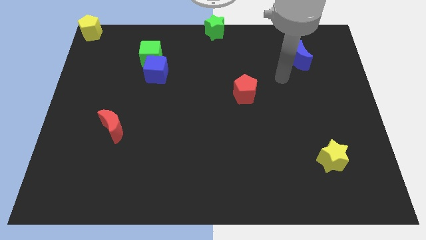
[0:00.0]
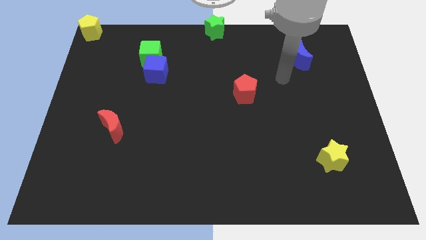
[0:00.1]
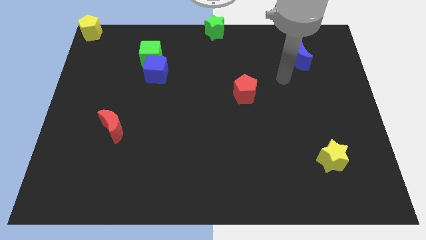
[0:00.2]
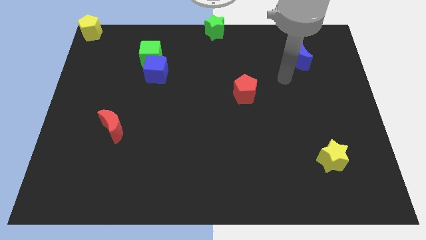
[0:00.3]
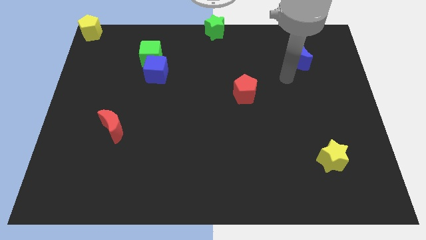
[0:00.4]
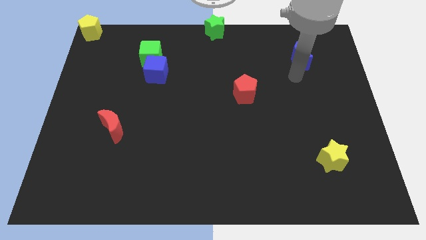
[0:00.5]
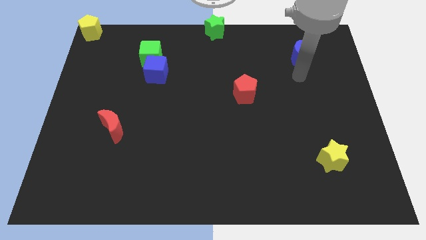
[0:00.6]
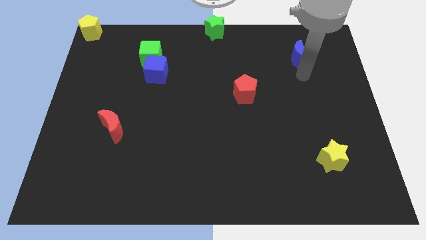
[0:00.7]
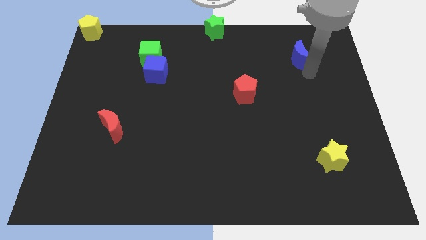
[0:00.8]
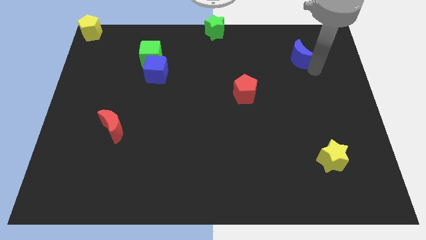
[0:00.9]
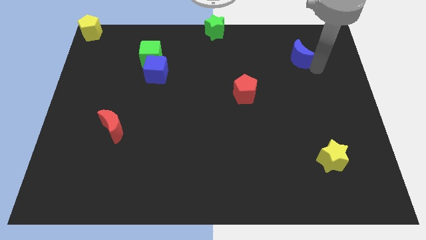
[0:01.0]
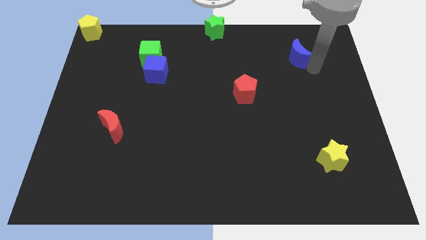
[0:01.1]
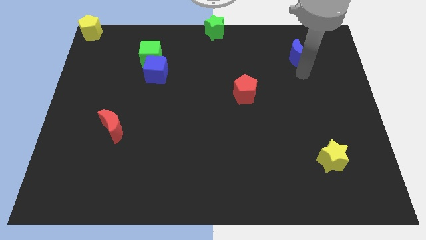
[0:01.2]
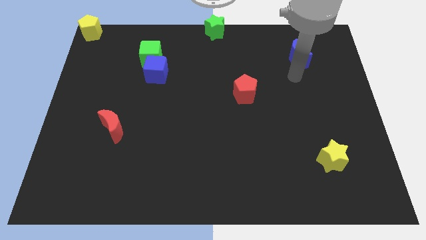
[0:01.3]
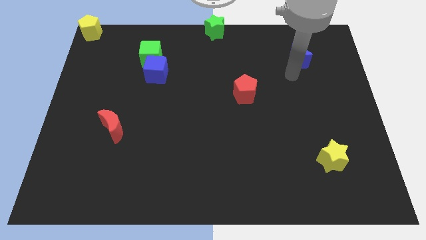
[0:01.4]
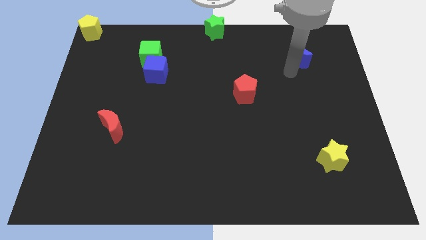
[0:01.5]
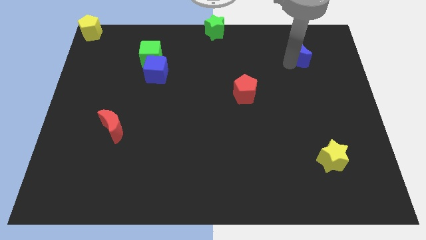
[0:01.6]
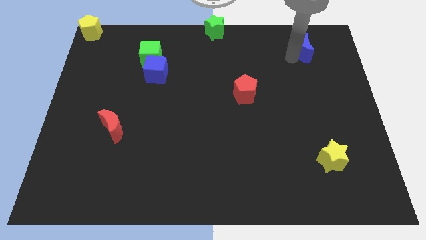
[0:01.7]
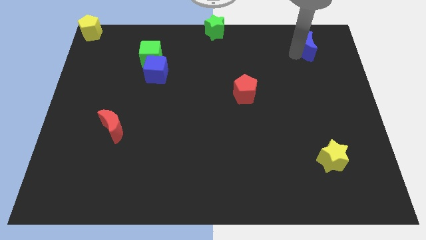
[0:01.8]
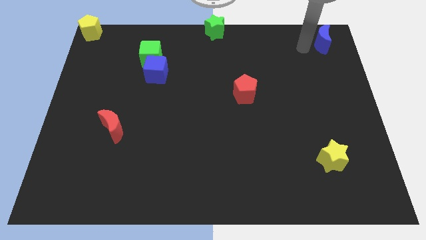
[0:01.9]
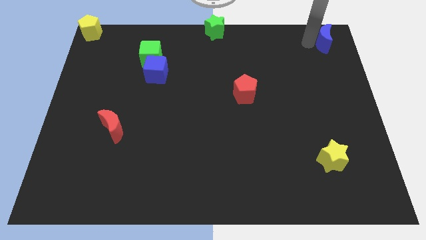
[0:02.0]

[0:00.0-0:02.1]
move the blue crescent to the top right

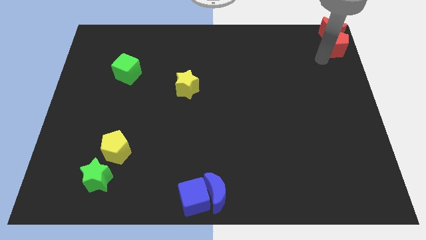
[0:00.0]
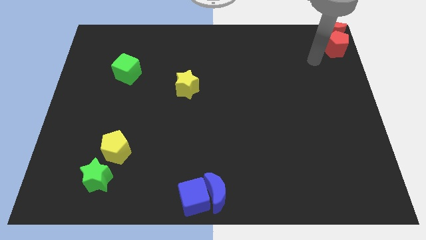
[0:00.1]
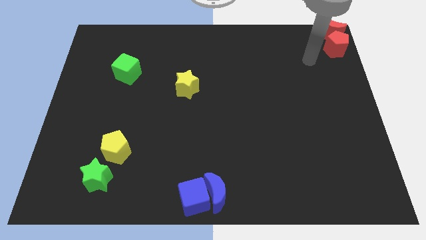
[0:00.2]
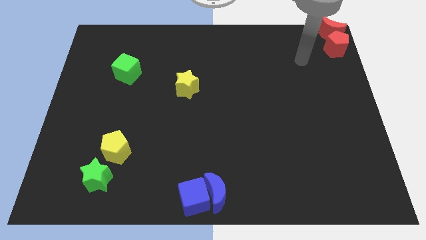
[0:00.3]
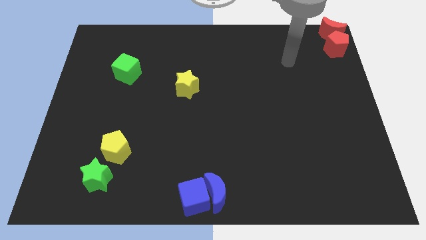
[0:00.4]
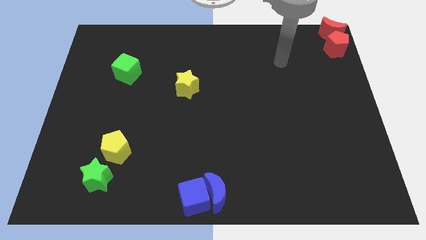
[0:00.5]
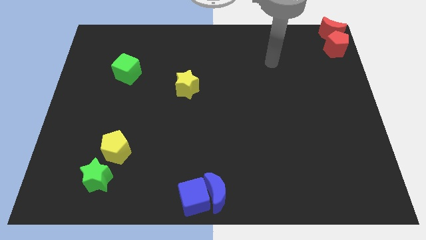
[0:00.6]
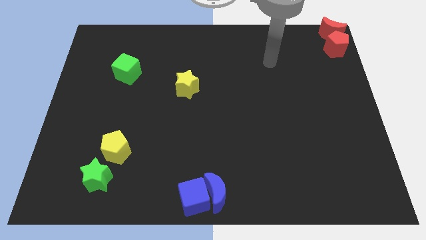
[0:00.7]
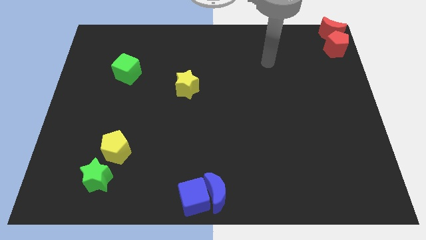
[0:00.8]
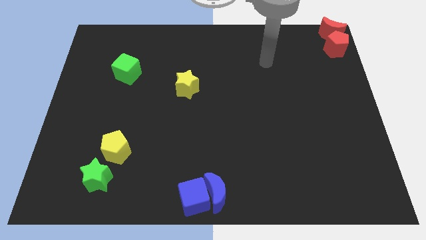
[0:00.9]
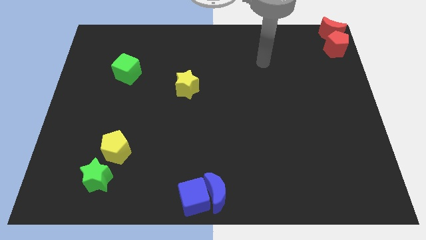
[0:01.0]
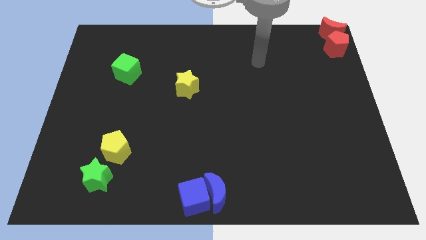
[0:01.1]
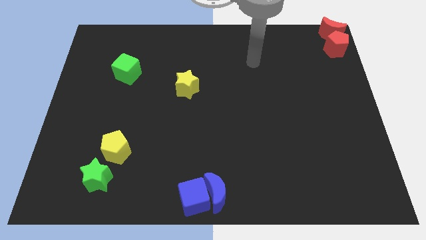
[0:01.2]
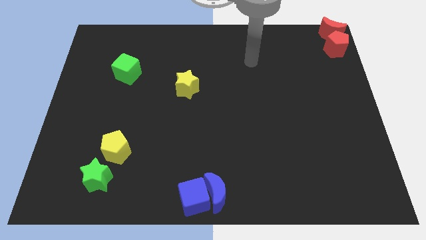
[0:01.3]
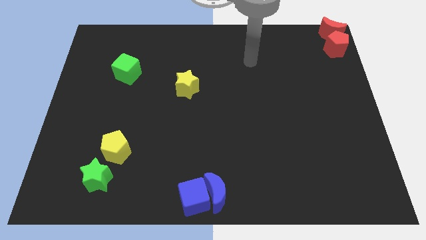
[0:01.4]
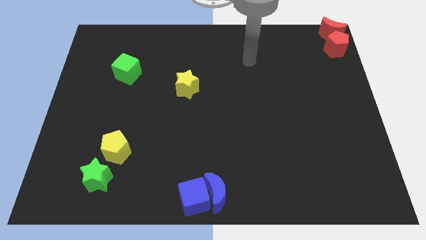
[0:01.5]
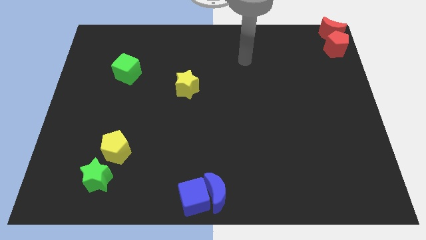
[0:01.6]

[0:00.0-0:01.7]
move your arm away from red pentagon

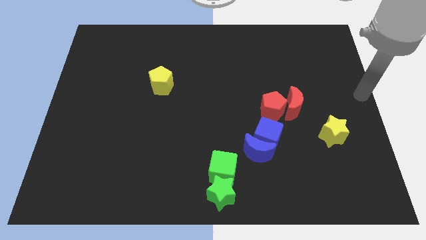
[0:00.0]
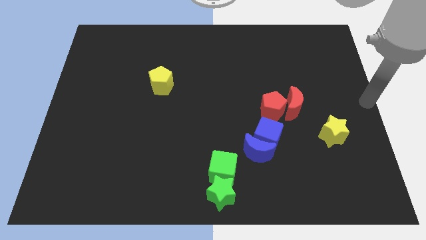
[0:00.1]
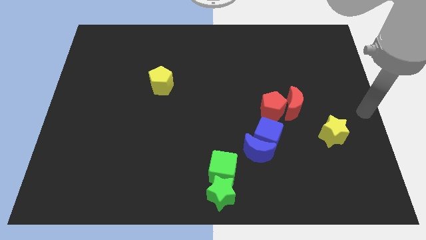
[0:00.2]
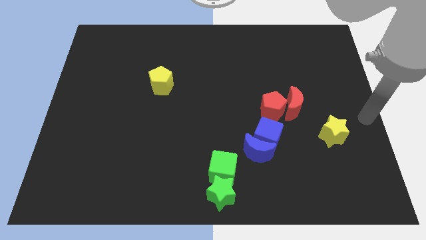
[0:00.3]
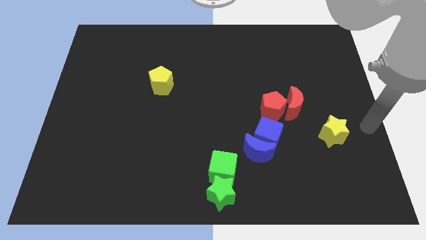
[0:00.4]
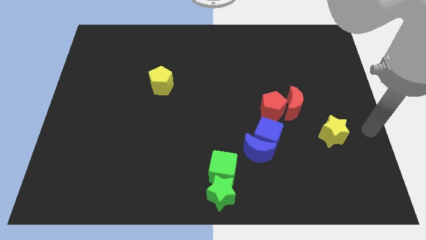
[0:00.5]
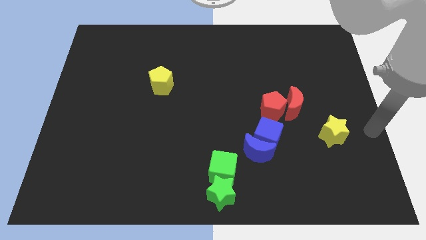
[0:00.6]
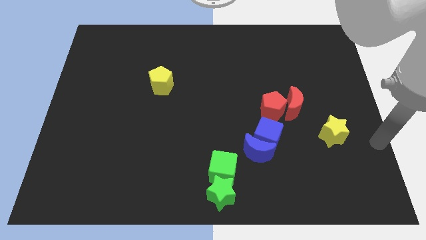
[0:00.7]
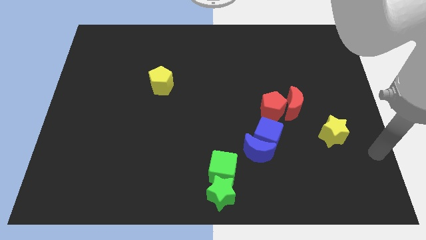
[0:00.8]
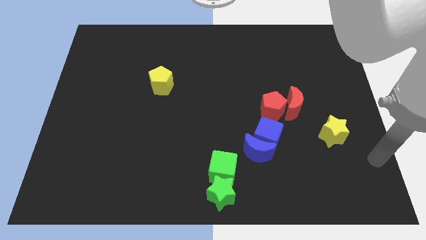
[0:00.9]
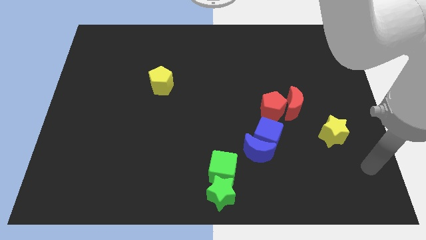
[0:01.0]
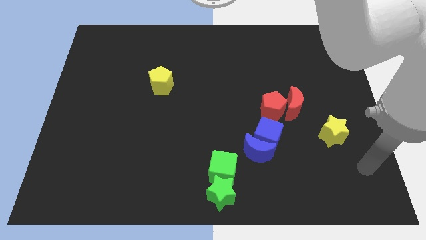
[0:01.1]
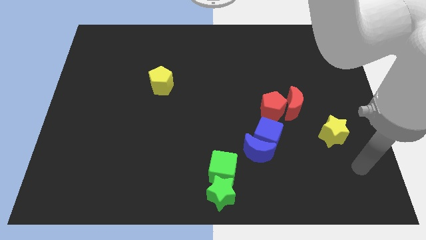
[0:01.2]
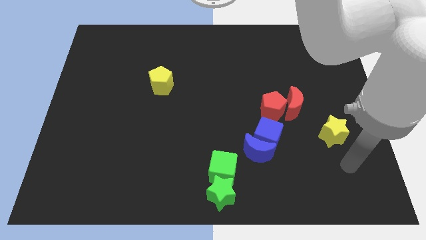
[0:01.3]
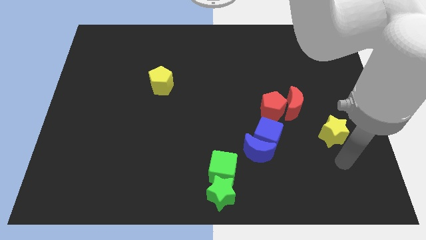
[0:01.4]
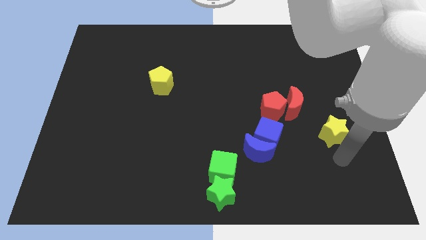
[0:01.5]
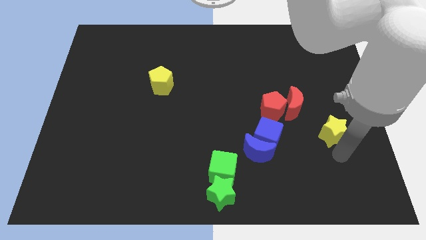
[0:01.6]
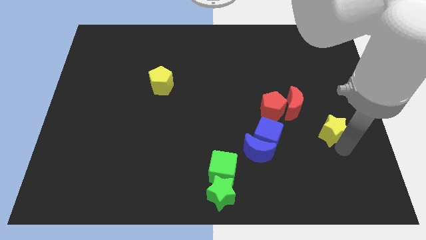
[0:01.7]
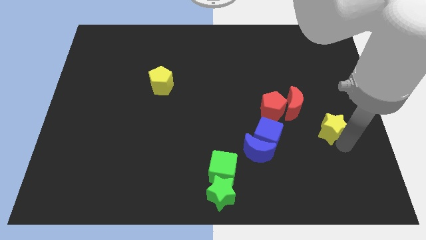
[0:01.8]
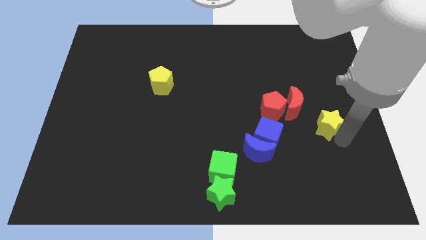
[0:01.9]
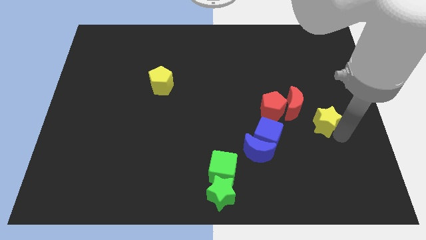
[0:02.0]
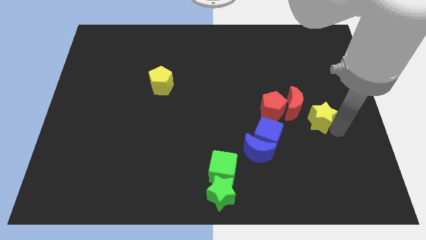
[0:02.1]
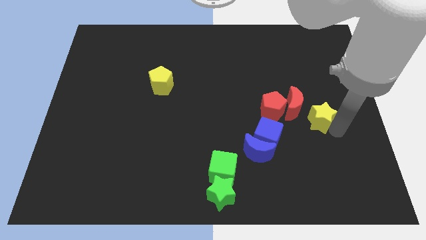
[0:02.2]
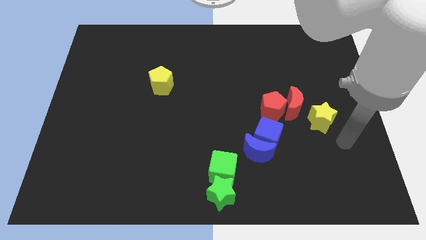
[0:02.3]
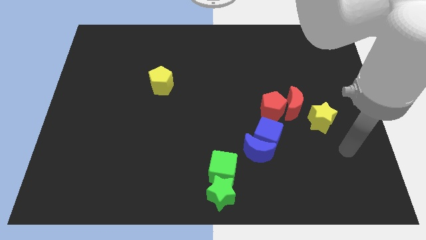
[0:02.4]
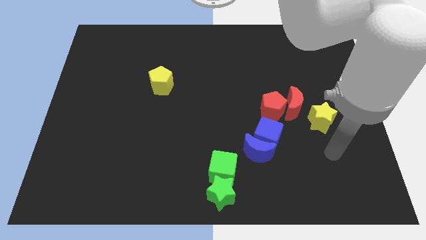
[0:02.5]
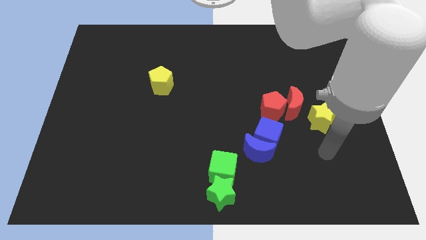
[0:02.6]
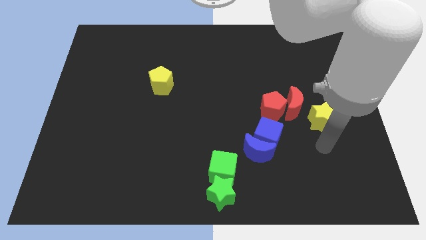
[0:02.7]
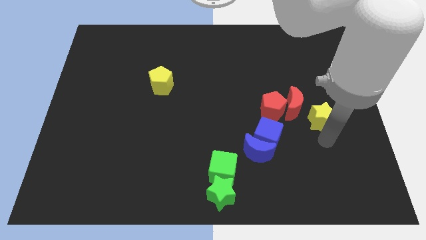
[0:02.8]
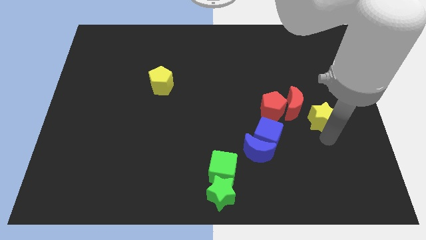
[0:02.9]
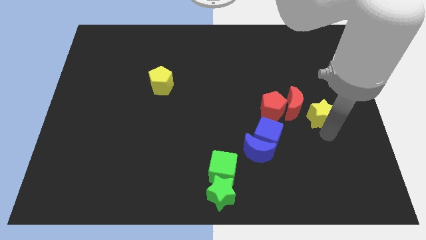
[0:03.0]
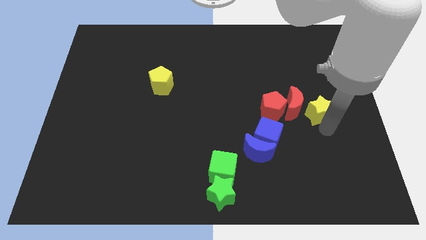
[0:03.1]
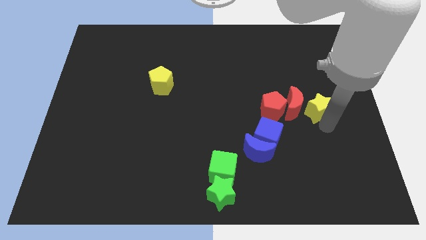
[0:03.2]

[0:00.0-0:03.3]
push yellow star beside red crescent

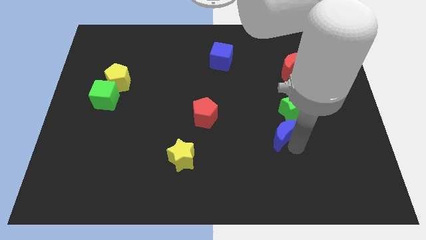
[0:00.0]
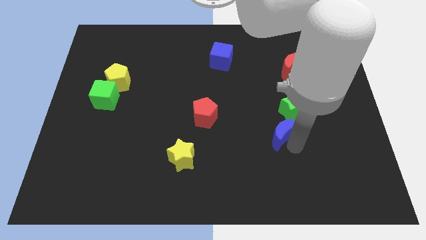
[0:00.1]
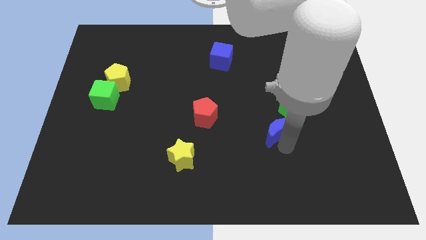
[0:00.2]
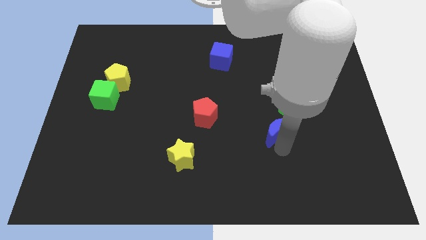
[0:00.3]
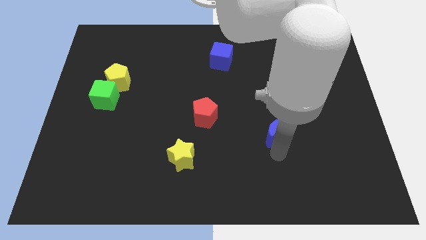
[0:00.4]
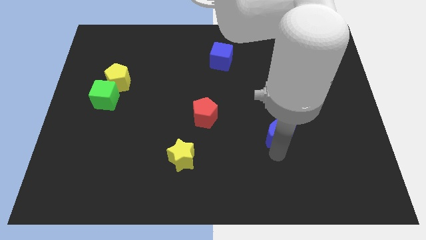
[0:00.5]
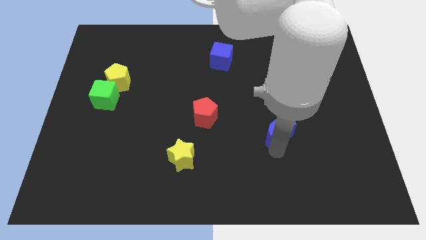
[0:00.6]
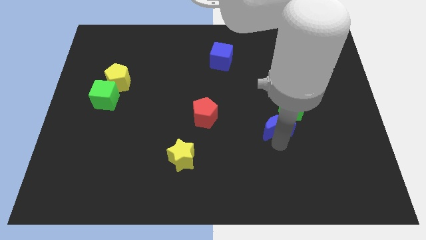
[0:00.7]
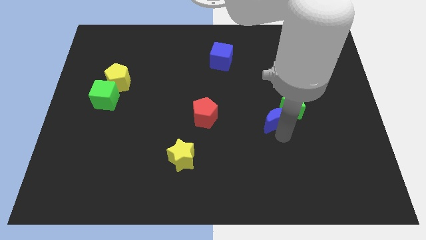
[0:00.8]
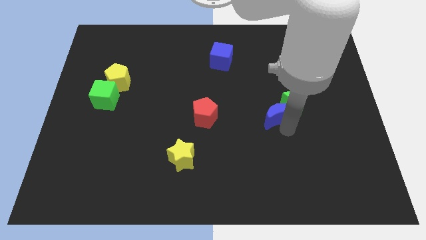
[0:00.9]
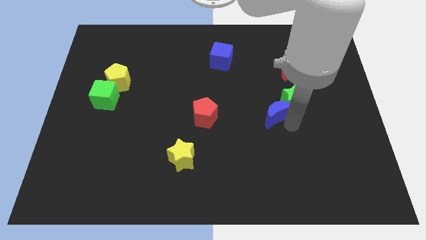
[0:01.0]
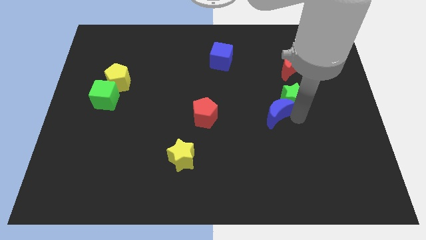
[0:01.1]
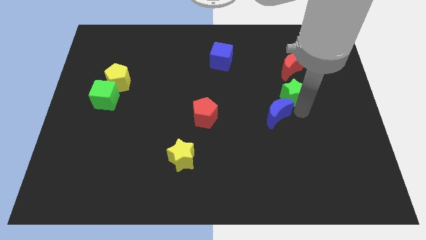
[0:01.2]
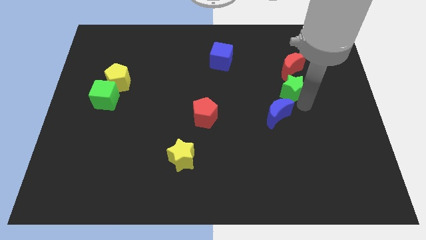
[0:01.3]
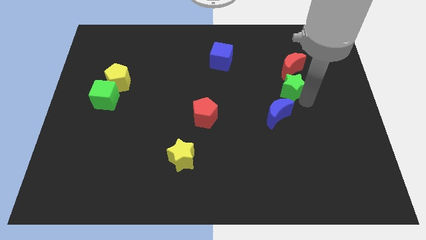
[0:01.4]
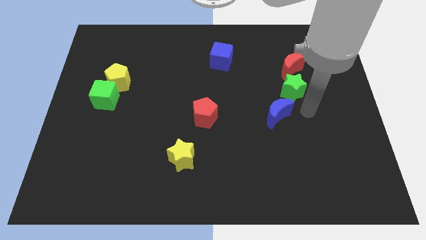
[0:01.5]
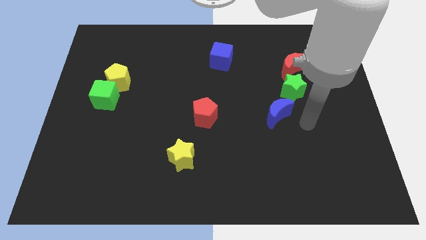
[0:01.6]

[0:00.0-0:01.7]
push the blue crescent into the green star

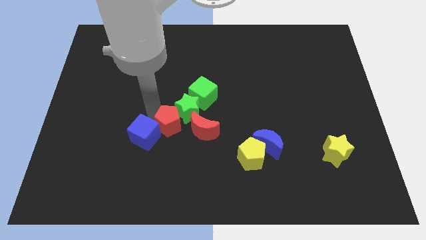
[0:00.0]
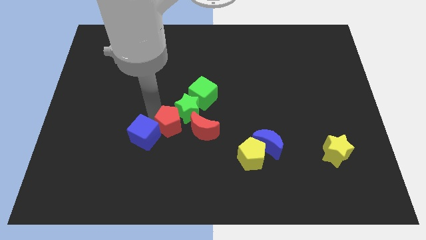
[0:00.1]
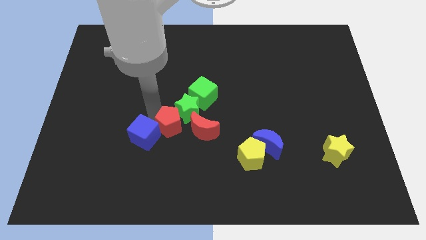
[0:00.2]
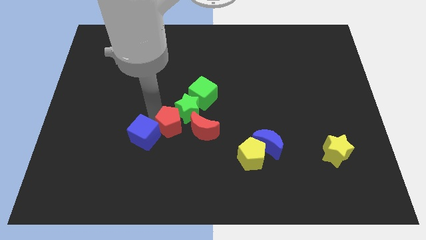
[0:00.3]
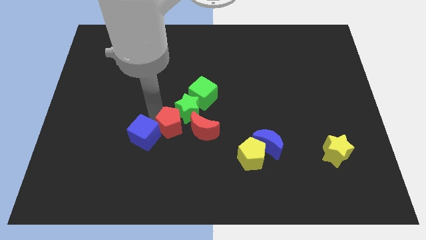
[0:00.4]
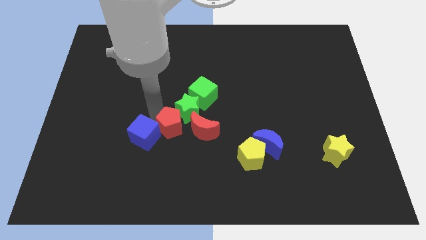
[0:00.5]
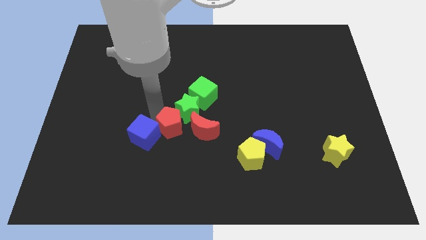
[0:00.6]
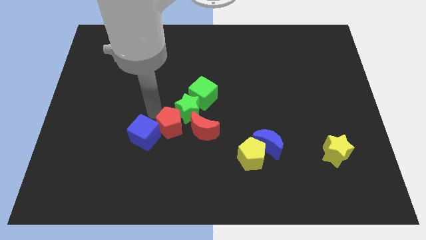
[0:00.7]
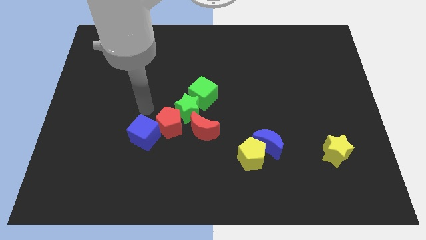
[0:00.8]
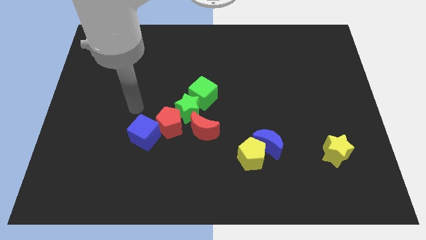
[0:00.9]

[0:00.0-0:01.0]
place the red pentagon between the green star and blue cube
